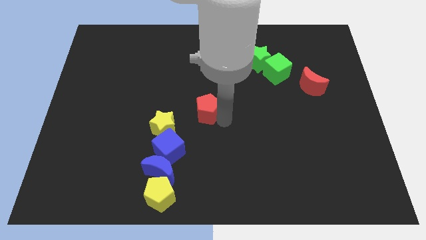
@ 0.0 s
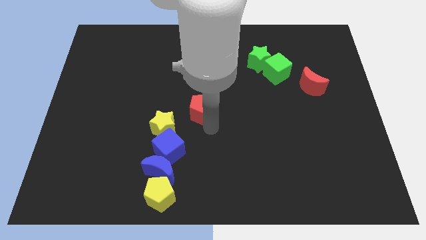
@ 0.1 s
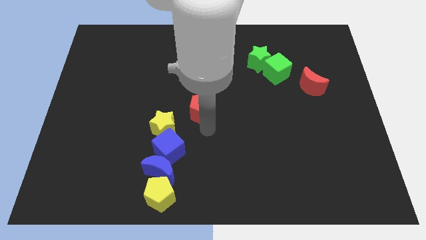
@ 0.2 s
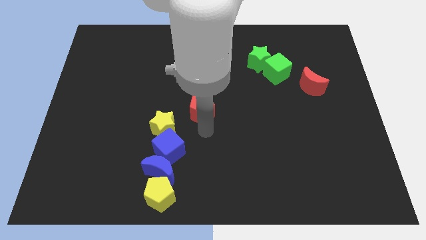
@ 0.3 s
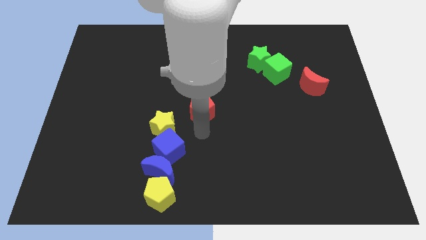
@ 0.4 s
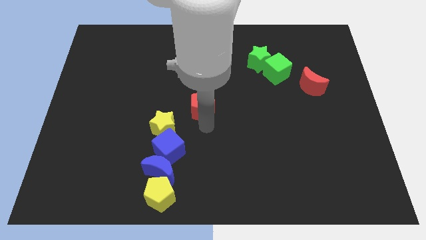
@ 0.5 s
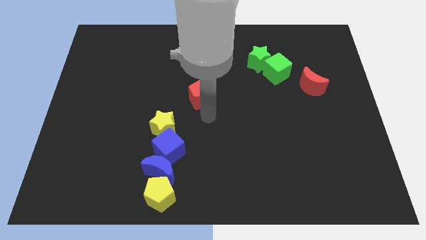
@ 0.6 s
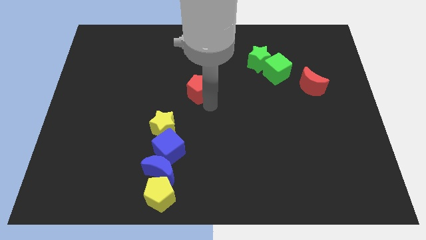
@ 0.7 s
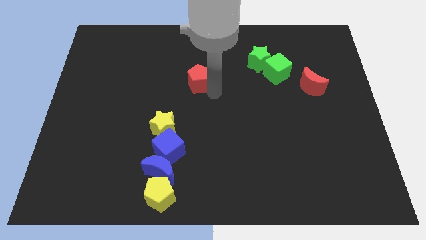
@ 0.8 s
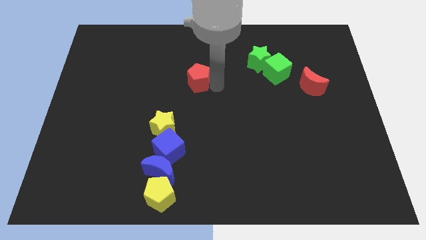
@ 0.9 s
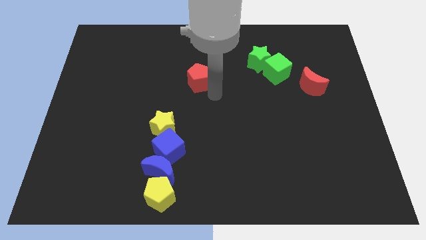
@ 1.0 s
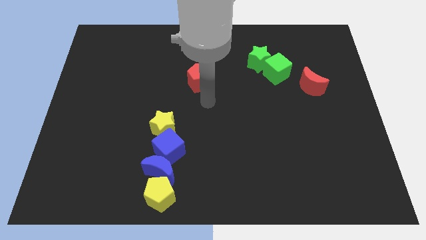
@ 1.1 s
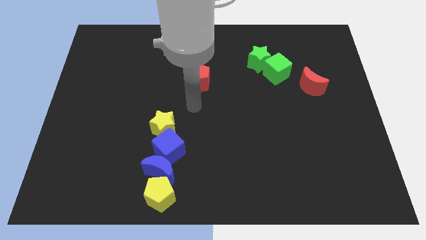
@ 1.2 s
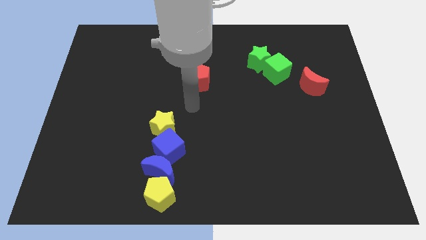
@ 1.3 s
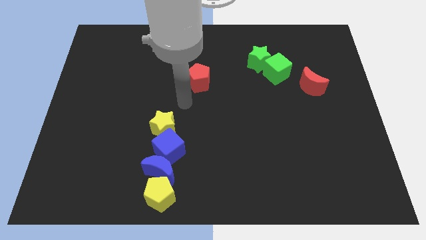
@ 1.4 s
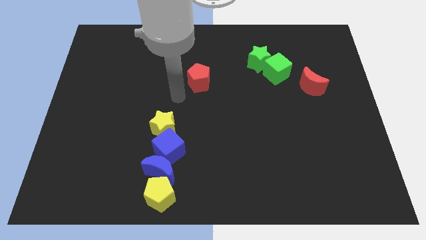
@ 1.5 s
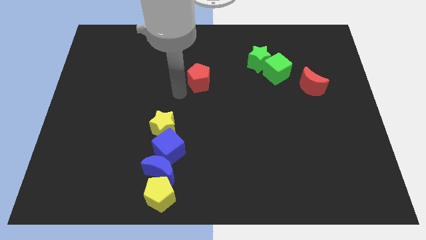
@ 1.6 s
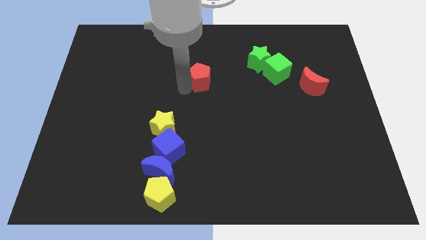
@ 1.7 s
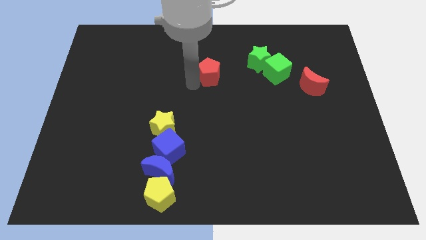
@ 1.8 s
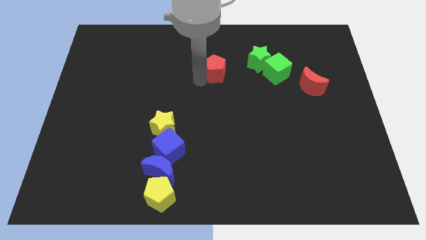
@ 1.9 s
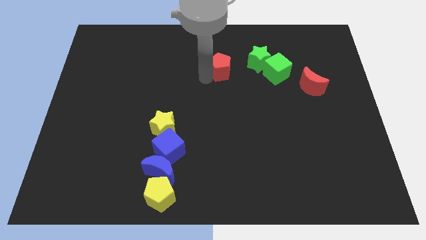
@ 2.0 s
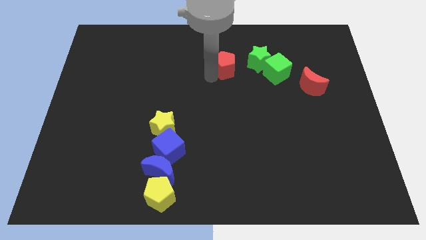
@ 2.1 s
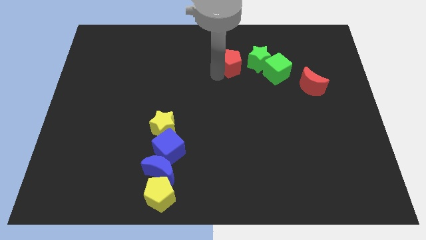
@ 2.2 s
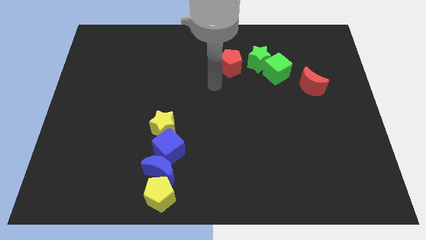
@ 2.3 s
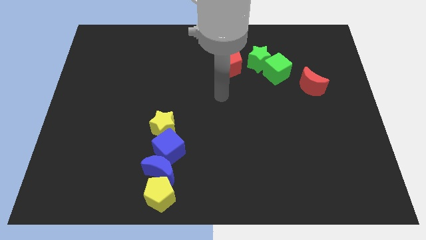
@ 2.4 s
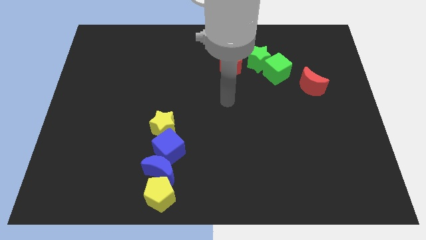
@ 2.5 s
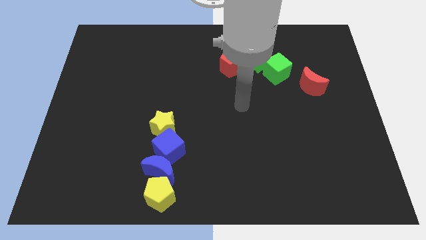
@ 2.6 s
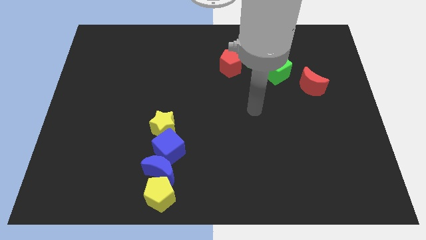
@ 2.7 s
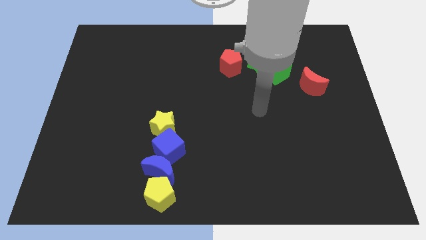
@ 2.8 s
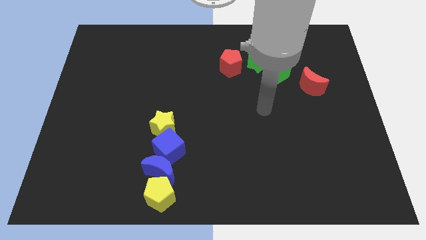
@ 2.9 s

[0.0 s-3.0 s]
place the red pentagon top middle to the green star

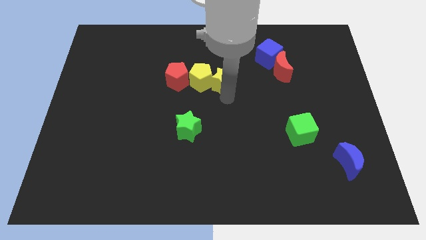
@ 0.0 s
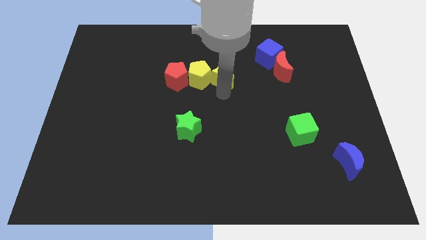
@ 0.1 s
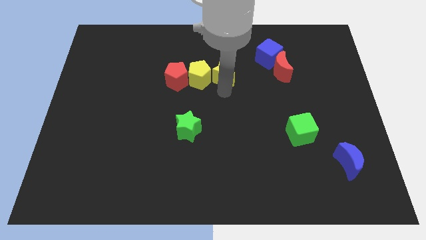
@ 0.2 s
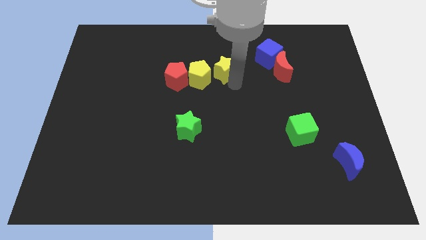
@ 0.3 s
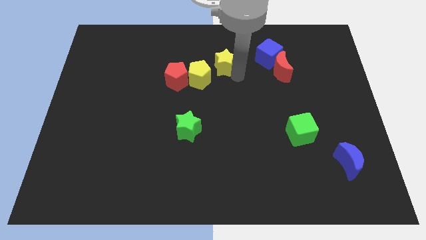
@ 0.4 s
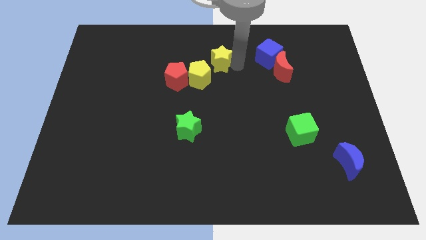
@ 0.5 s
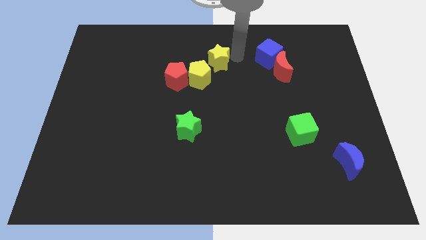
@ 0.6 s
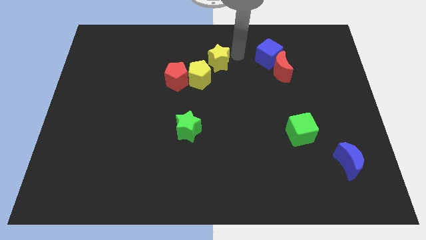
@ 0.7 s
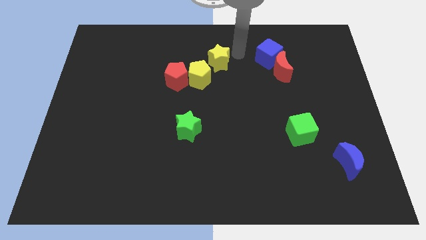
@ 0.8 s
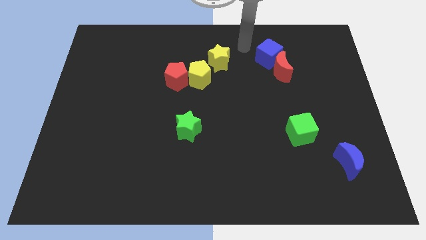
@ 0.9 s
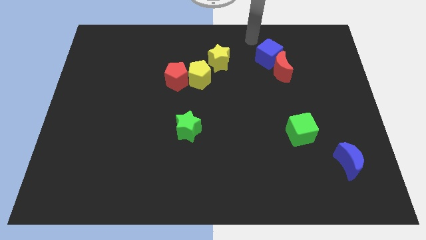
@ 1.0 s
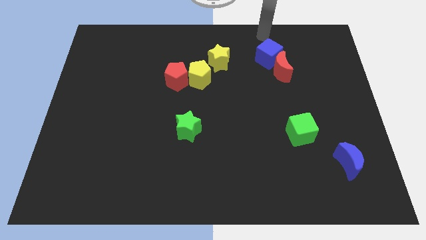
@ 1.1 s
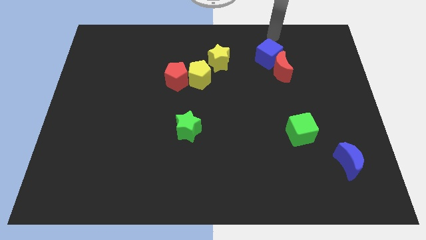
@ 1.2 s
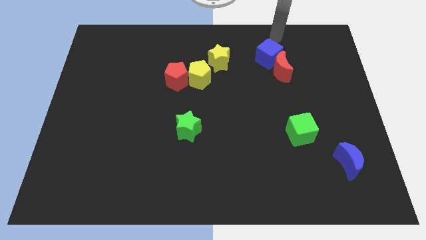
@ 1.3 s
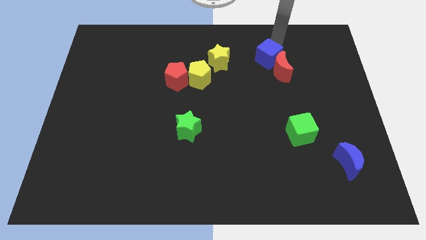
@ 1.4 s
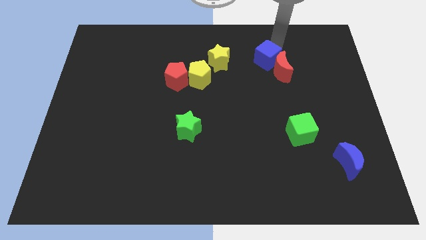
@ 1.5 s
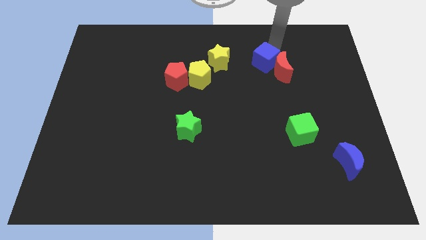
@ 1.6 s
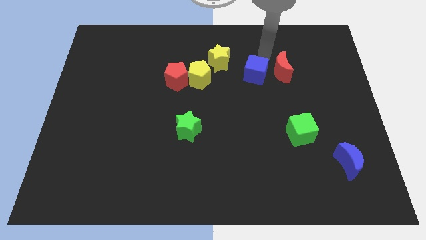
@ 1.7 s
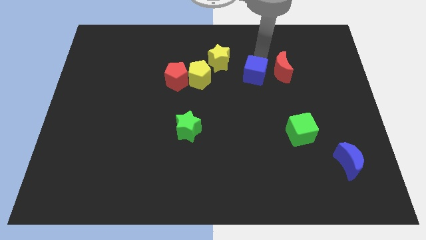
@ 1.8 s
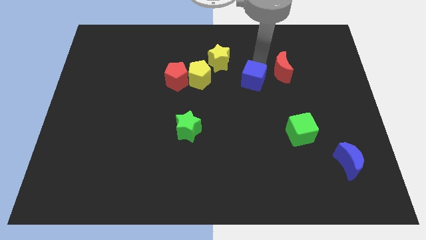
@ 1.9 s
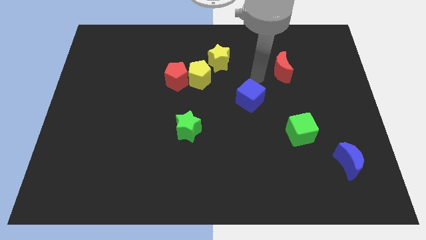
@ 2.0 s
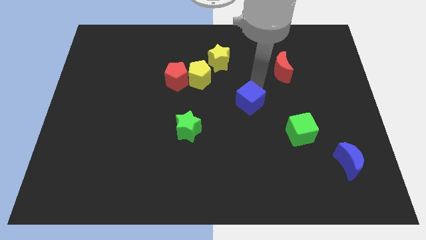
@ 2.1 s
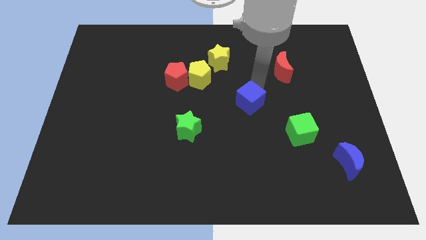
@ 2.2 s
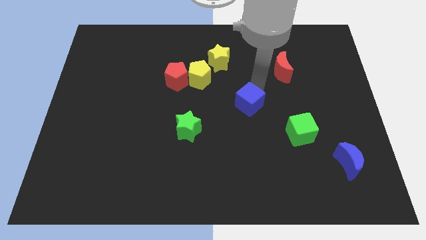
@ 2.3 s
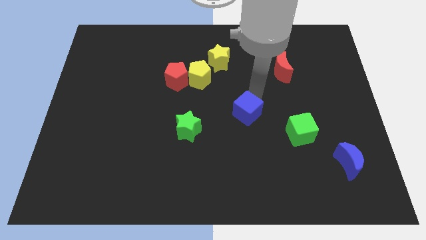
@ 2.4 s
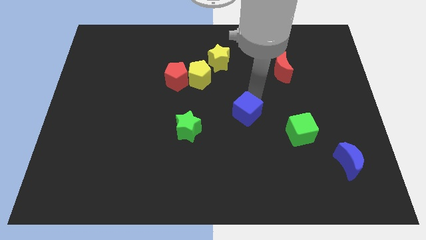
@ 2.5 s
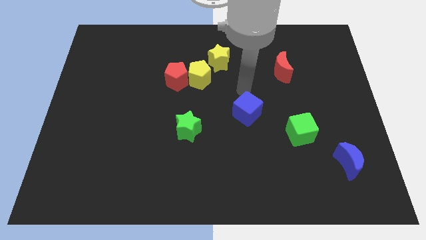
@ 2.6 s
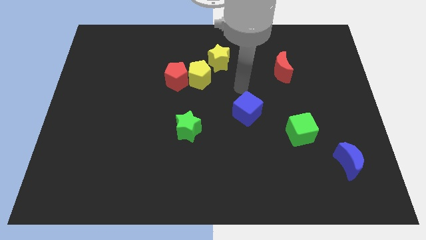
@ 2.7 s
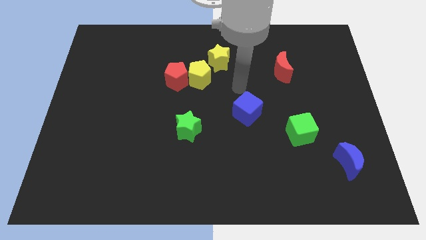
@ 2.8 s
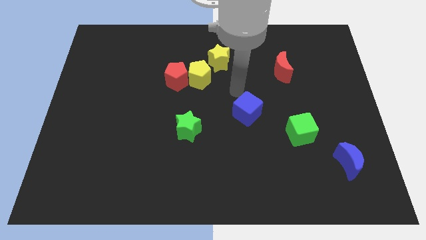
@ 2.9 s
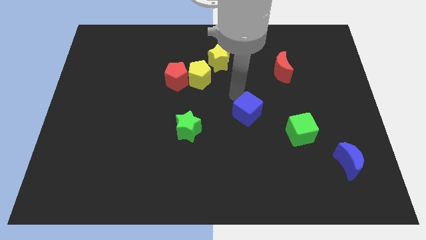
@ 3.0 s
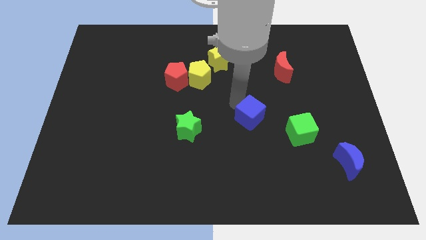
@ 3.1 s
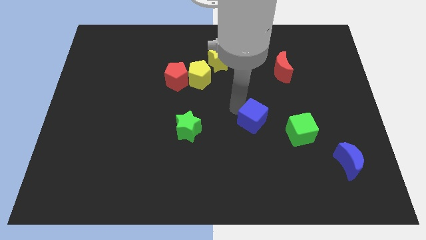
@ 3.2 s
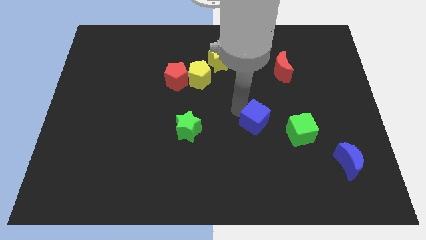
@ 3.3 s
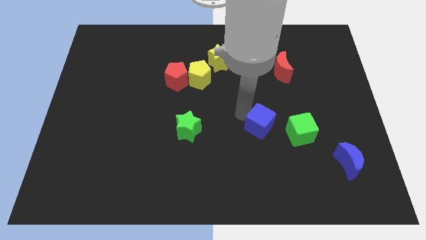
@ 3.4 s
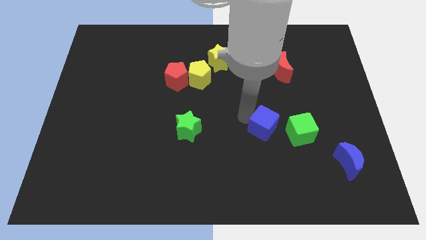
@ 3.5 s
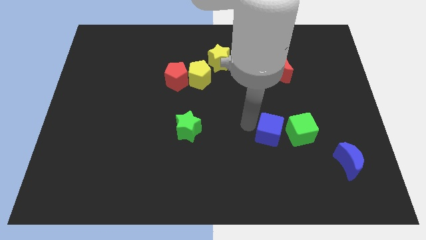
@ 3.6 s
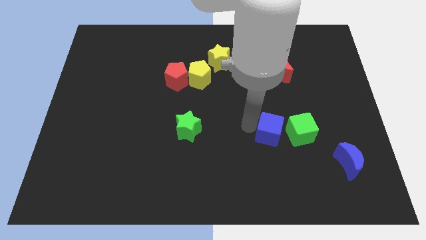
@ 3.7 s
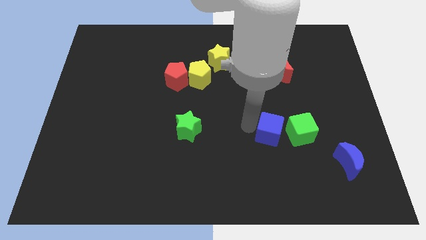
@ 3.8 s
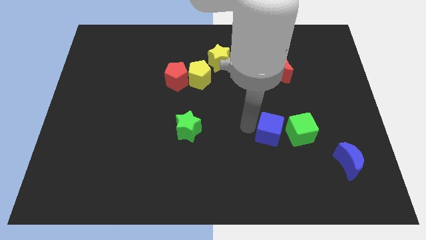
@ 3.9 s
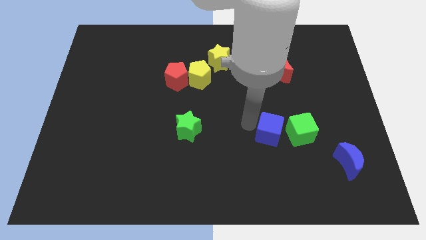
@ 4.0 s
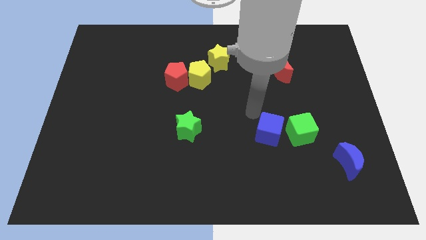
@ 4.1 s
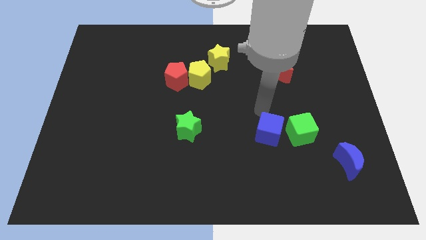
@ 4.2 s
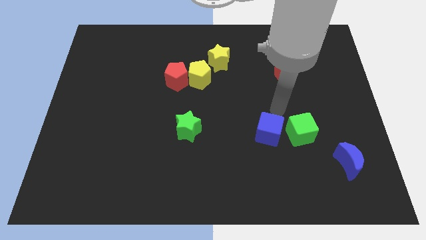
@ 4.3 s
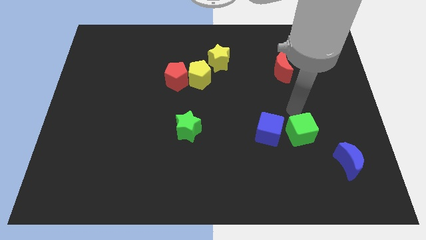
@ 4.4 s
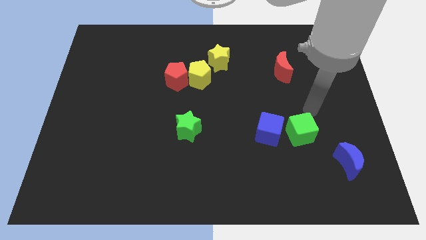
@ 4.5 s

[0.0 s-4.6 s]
separate the blue cube and the red moon

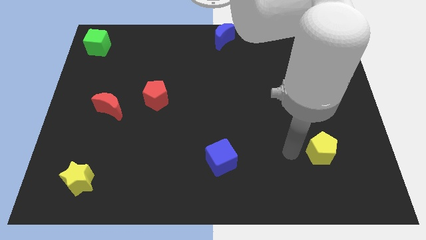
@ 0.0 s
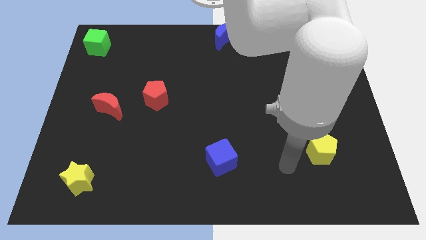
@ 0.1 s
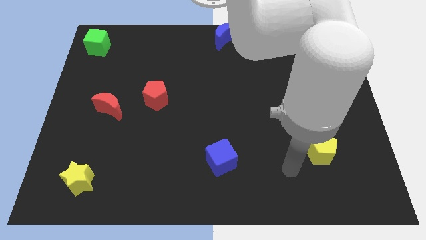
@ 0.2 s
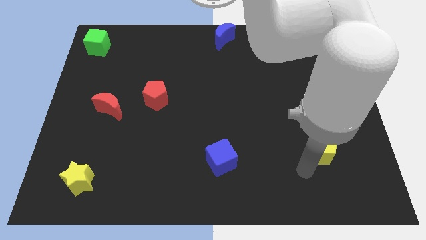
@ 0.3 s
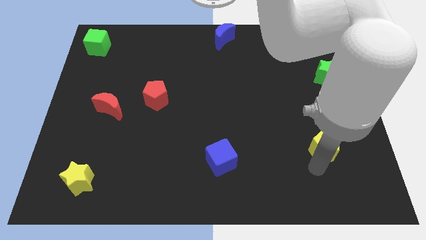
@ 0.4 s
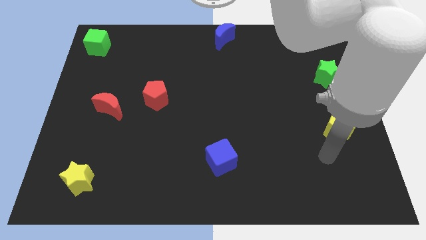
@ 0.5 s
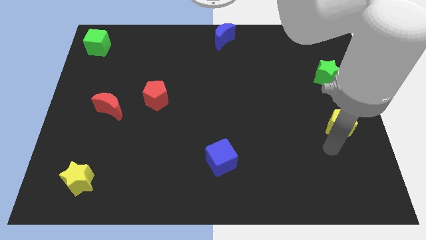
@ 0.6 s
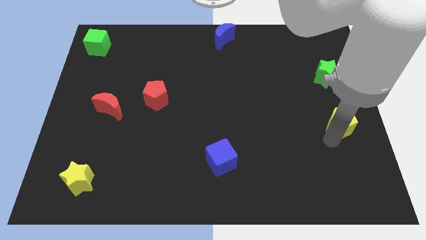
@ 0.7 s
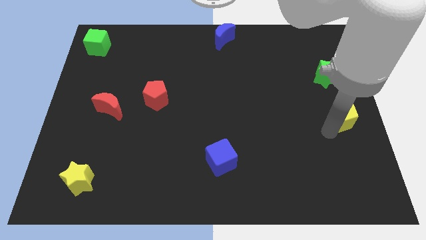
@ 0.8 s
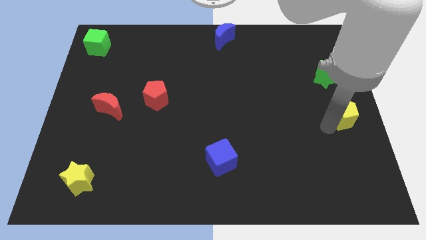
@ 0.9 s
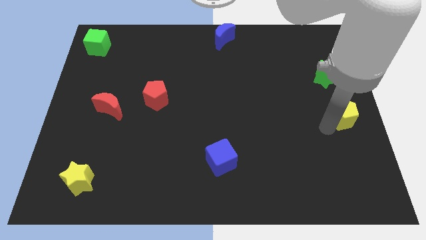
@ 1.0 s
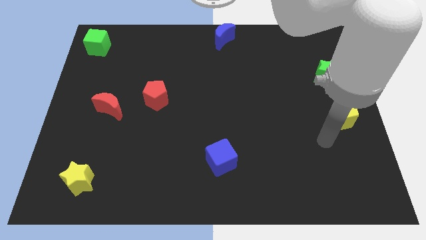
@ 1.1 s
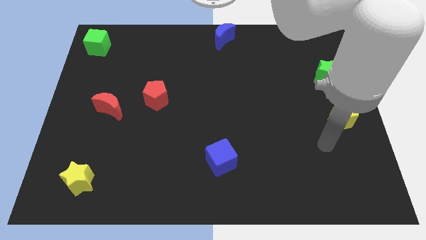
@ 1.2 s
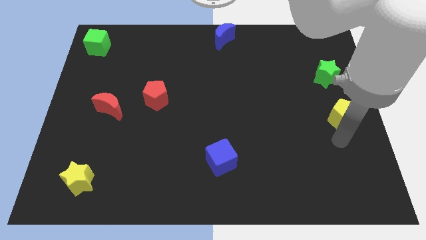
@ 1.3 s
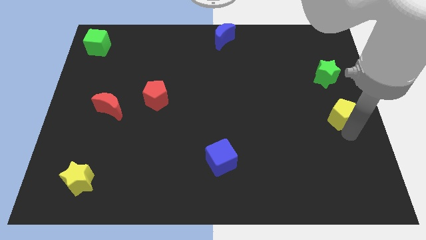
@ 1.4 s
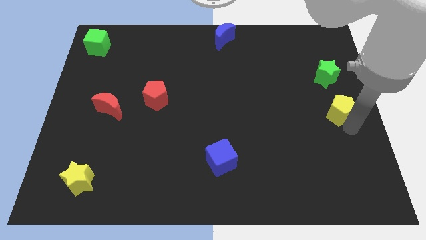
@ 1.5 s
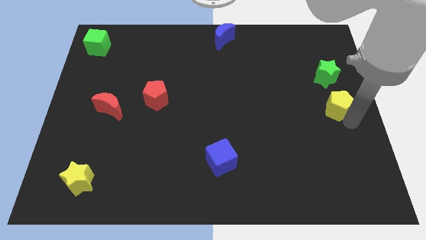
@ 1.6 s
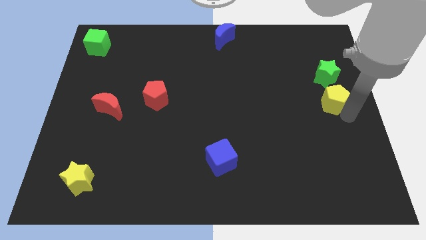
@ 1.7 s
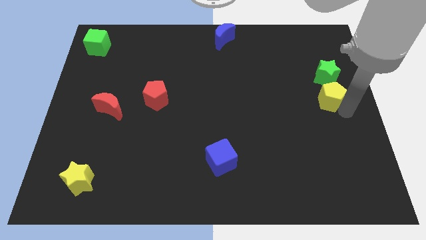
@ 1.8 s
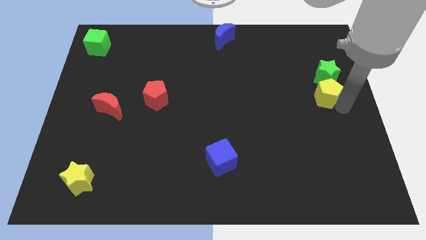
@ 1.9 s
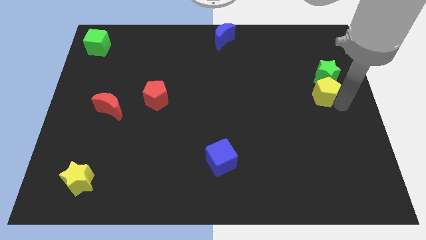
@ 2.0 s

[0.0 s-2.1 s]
place yellow pentagon below the green star
